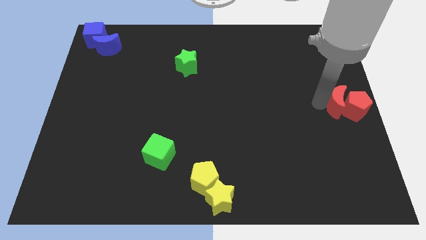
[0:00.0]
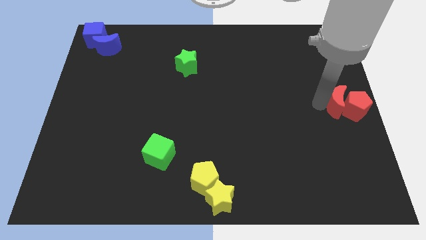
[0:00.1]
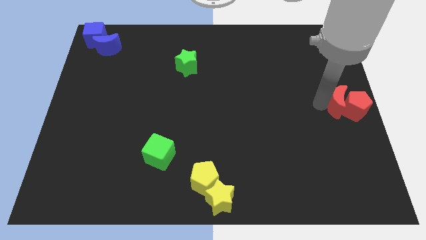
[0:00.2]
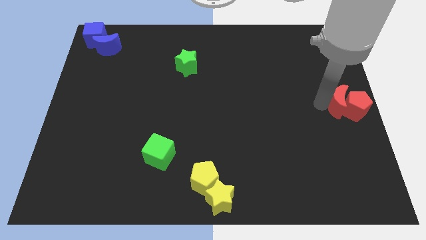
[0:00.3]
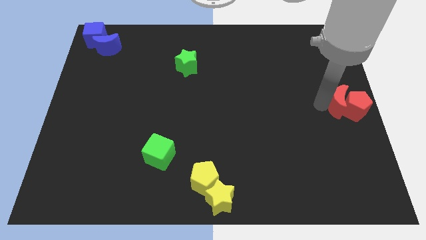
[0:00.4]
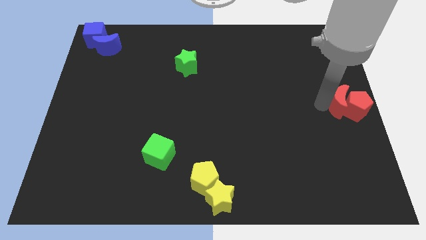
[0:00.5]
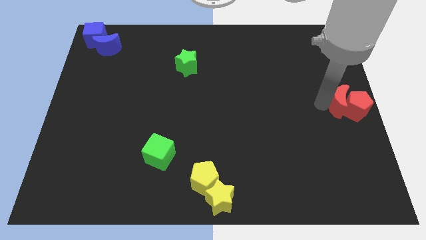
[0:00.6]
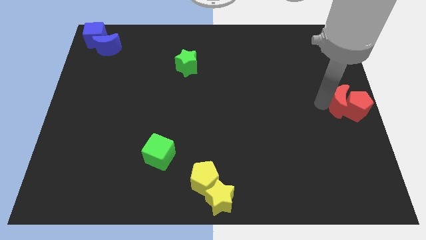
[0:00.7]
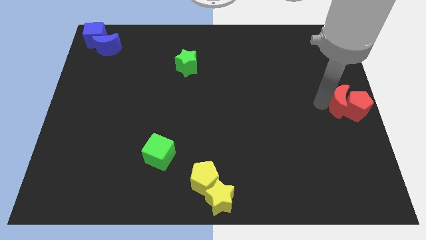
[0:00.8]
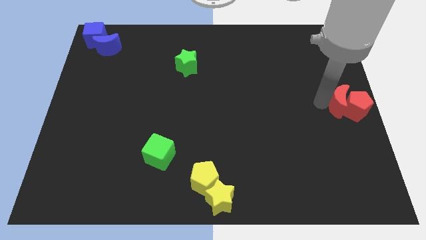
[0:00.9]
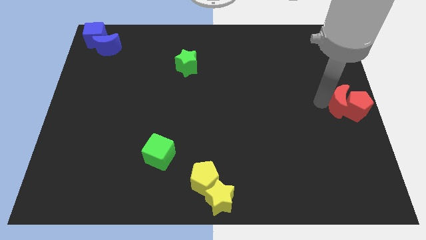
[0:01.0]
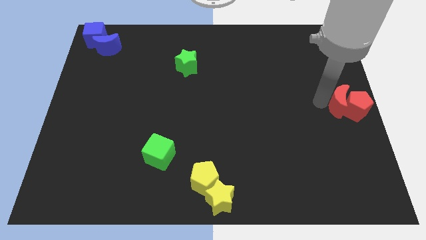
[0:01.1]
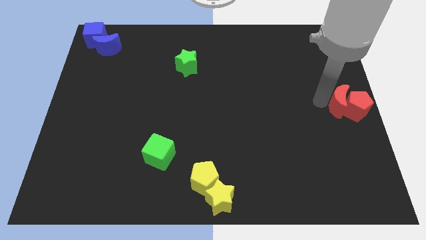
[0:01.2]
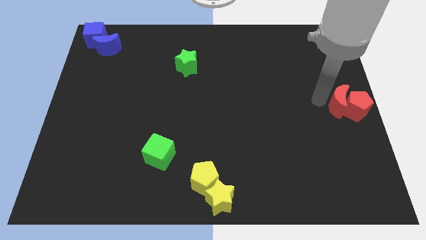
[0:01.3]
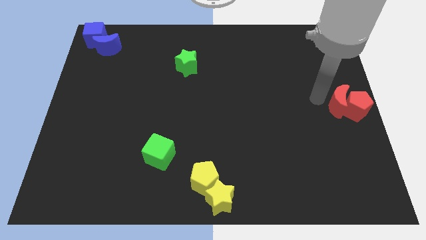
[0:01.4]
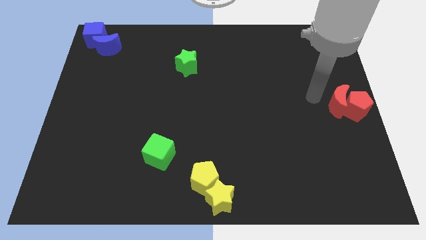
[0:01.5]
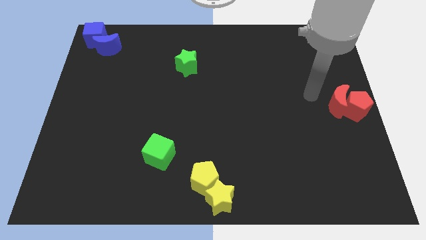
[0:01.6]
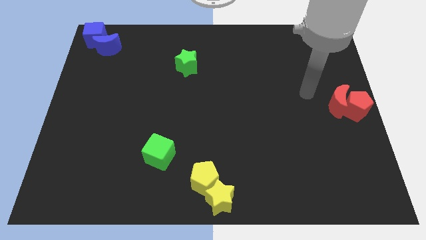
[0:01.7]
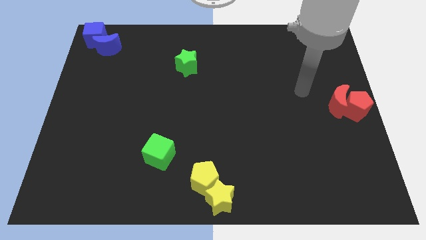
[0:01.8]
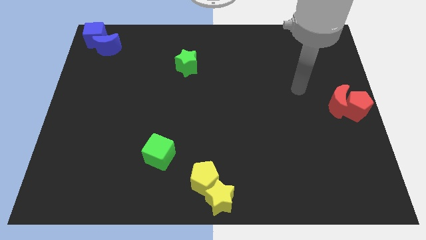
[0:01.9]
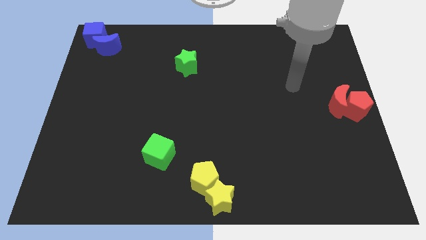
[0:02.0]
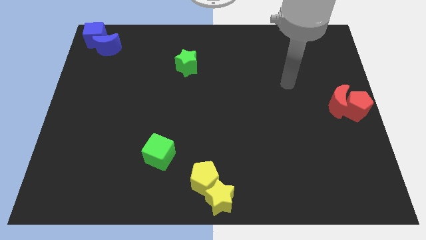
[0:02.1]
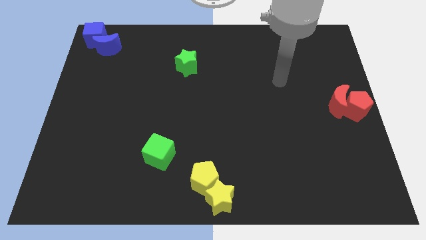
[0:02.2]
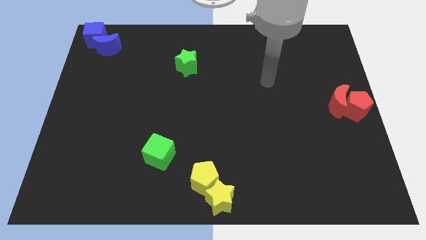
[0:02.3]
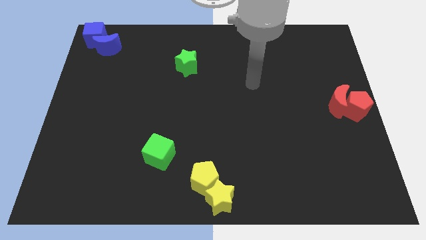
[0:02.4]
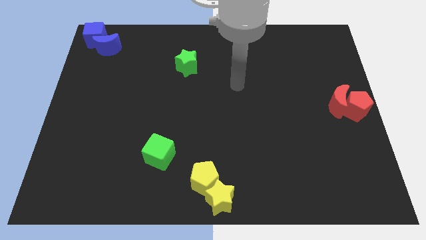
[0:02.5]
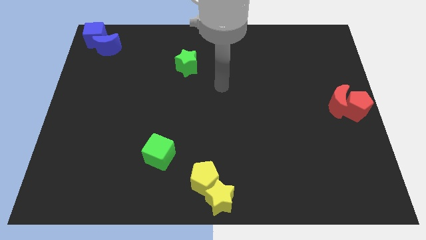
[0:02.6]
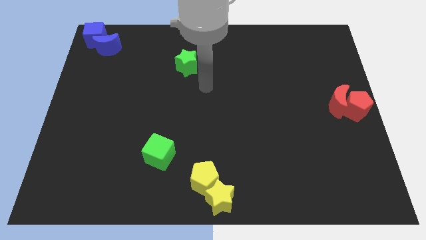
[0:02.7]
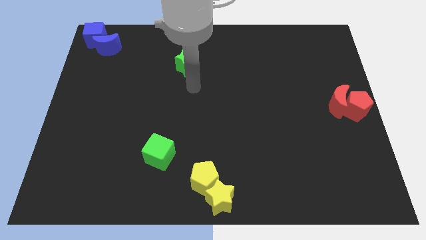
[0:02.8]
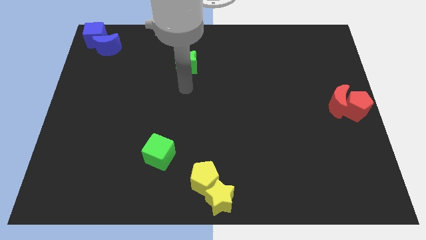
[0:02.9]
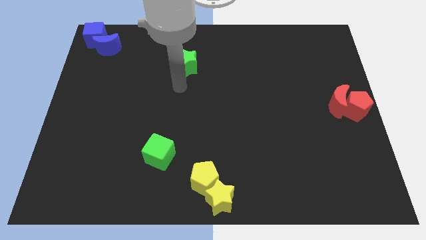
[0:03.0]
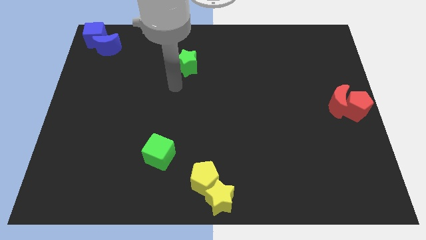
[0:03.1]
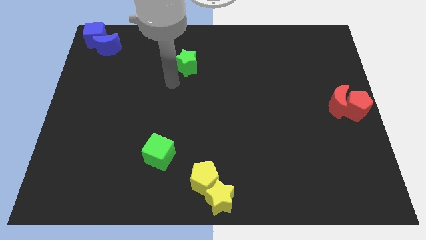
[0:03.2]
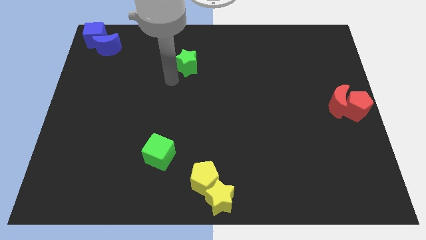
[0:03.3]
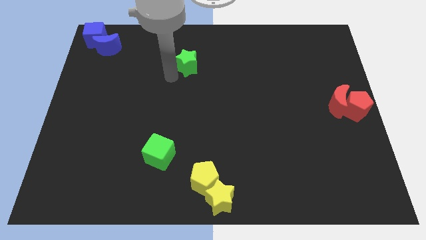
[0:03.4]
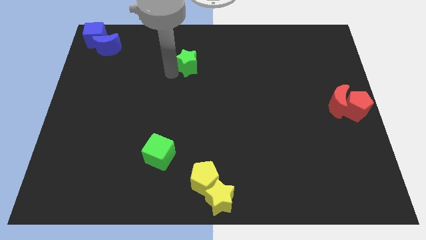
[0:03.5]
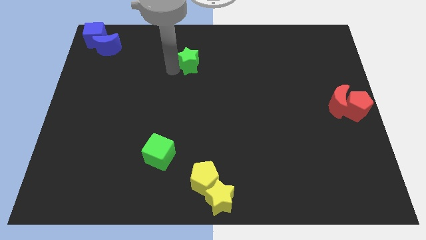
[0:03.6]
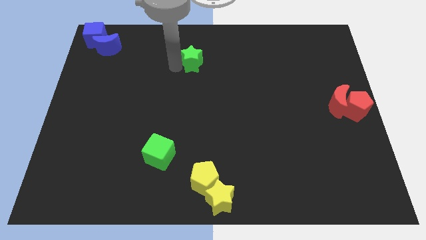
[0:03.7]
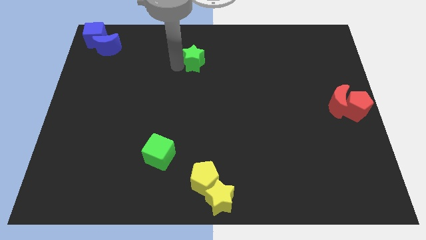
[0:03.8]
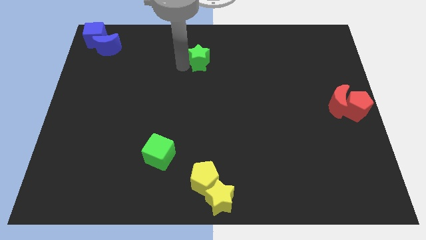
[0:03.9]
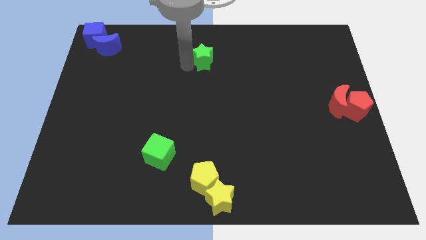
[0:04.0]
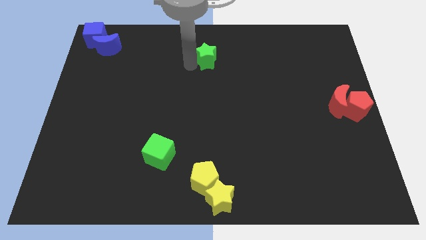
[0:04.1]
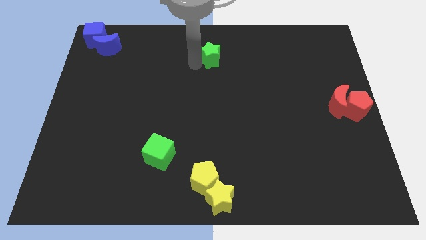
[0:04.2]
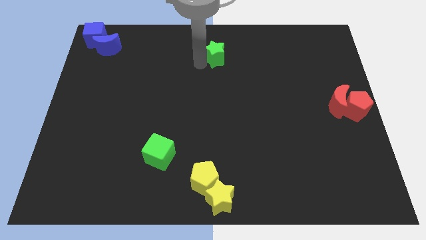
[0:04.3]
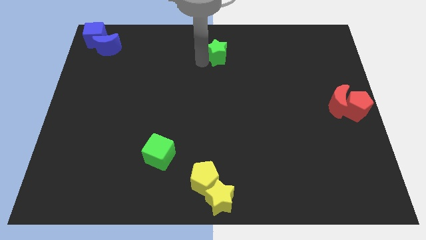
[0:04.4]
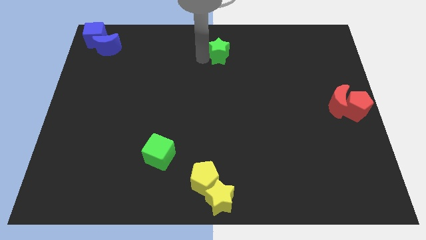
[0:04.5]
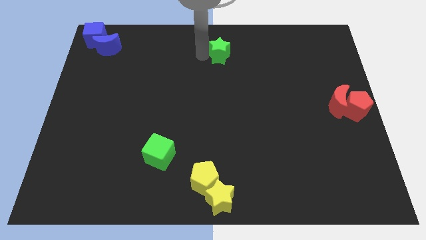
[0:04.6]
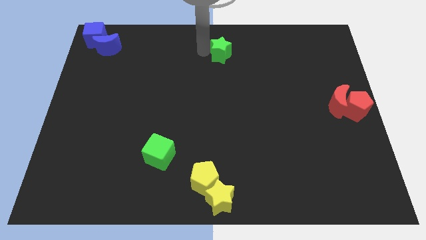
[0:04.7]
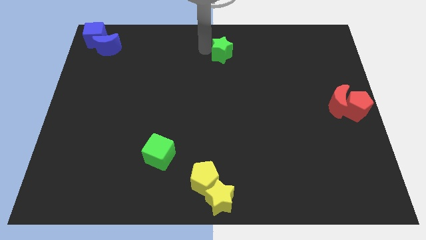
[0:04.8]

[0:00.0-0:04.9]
move the green star to the top center of the board

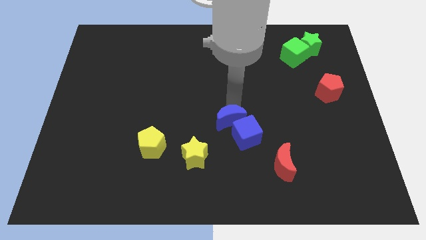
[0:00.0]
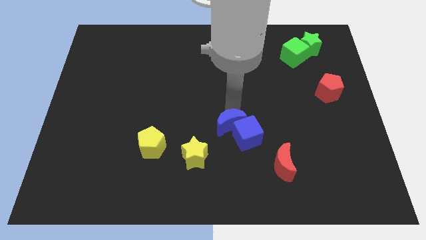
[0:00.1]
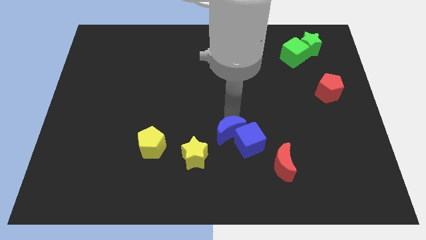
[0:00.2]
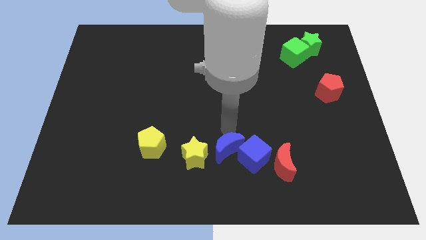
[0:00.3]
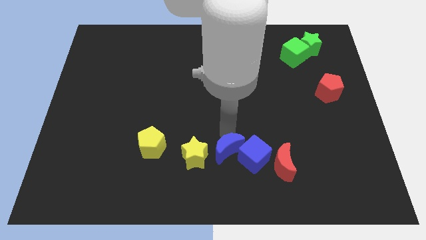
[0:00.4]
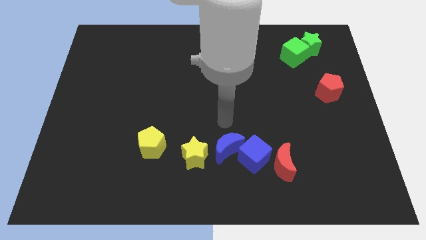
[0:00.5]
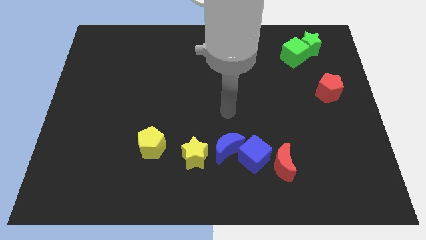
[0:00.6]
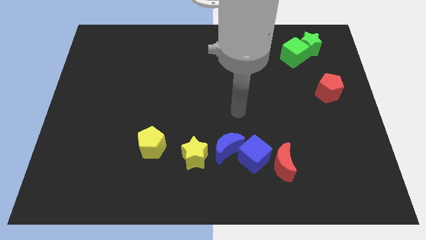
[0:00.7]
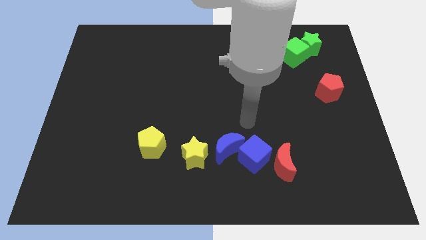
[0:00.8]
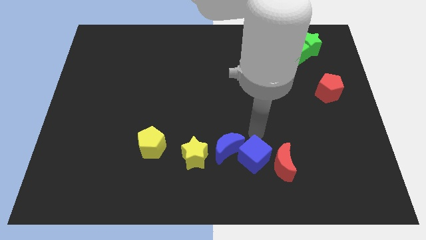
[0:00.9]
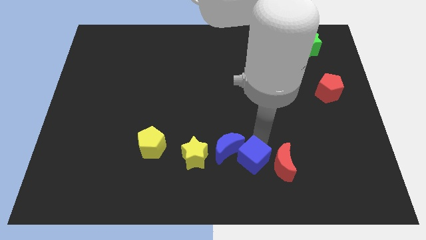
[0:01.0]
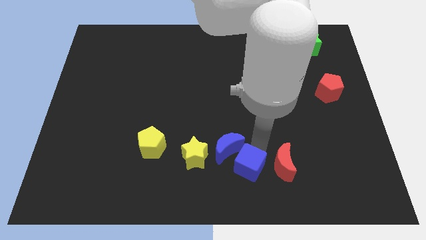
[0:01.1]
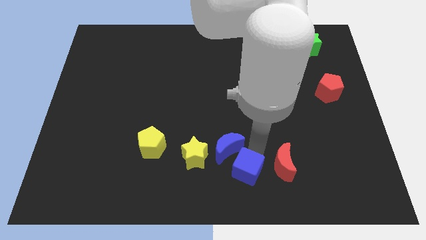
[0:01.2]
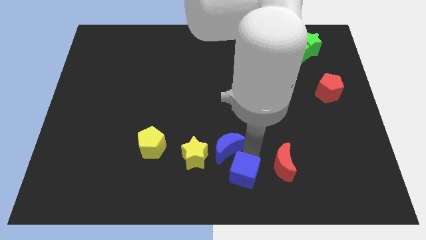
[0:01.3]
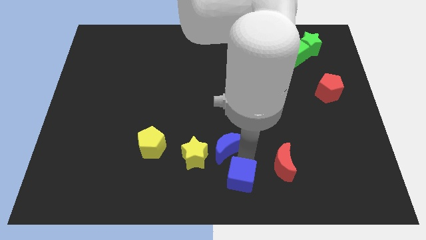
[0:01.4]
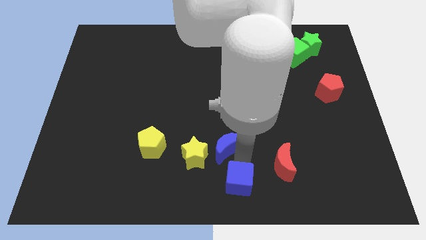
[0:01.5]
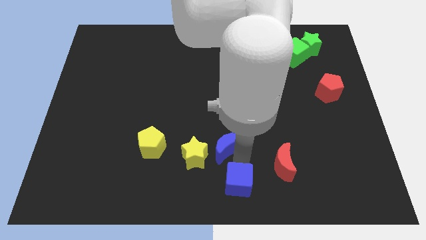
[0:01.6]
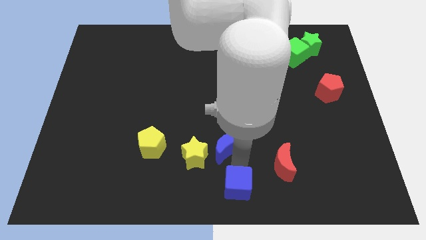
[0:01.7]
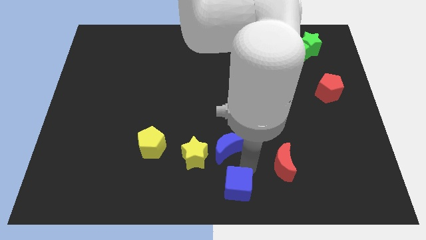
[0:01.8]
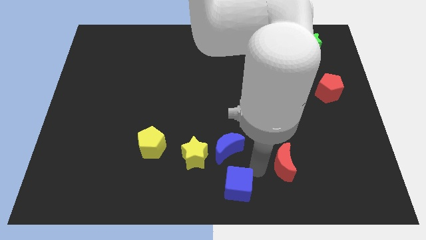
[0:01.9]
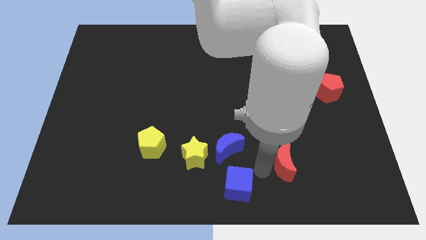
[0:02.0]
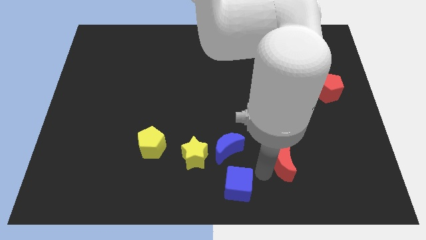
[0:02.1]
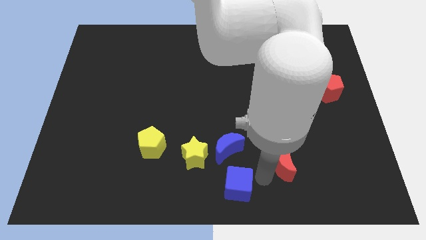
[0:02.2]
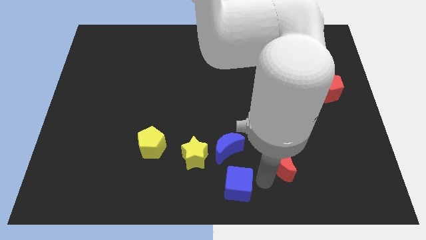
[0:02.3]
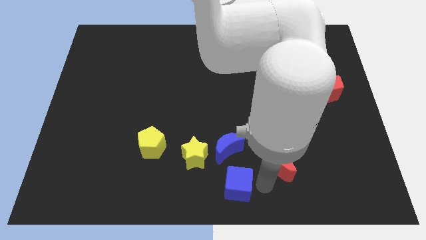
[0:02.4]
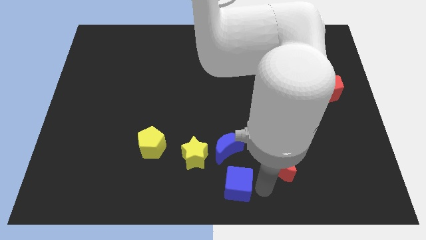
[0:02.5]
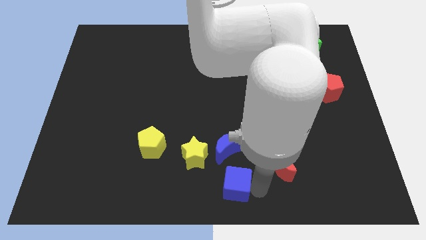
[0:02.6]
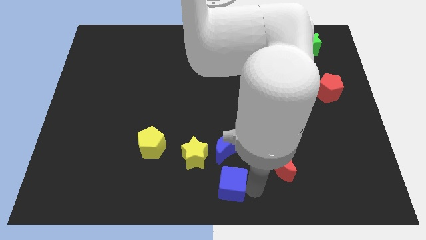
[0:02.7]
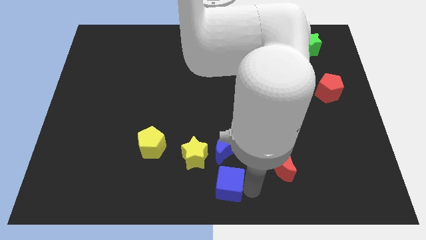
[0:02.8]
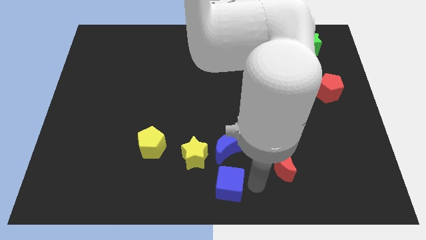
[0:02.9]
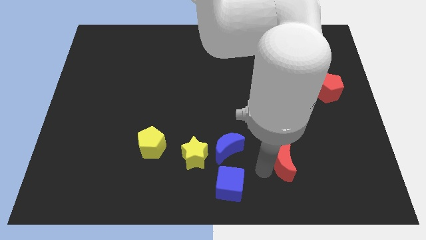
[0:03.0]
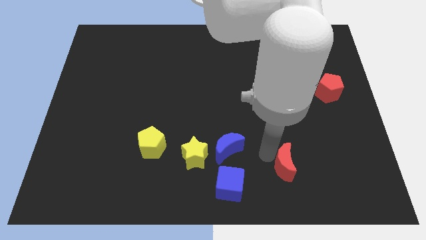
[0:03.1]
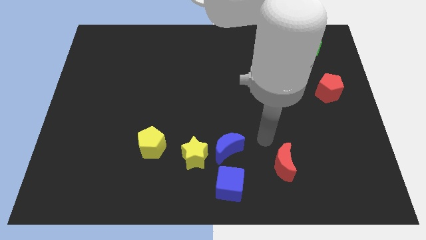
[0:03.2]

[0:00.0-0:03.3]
place the blue blocks in a vertical line at the bottom center of the board

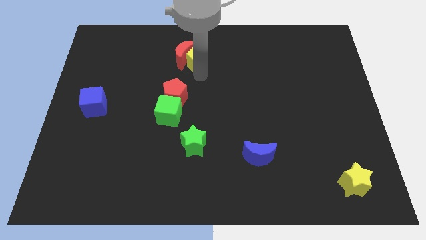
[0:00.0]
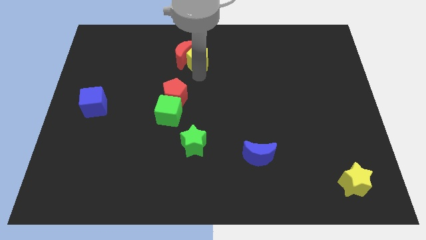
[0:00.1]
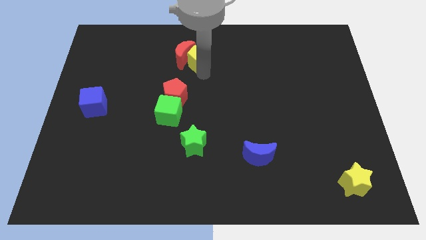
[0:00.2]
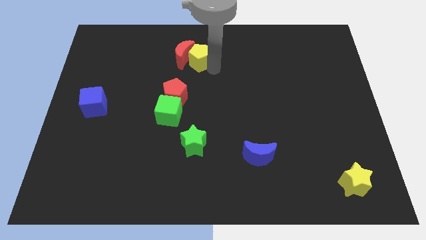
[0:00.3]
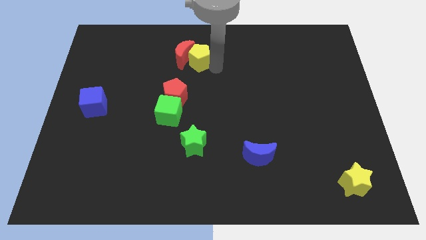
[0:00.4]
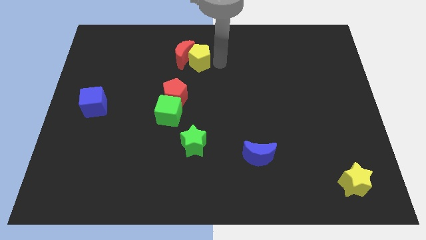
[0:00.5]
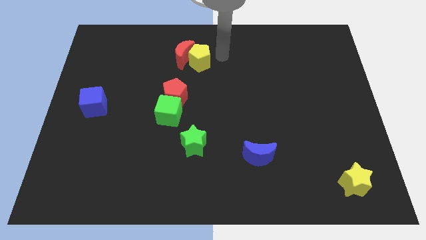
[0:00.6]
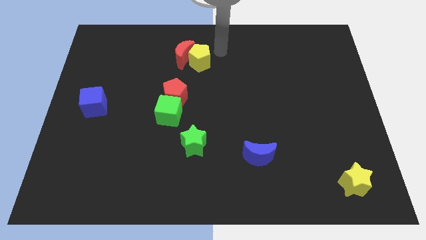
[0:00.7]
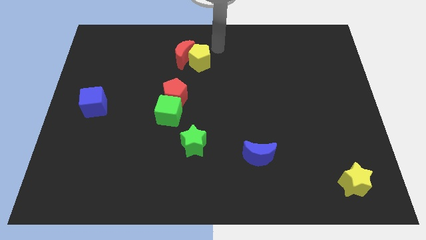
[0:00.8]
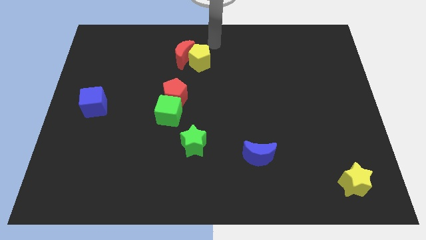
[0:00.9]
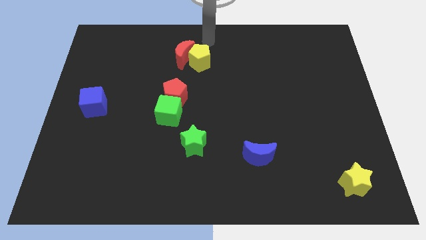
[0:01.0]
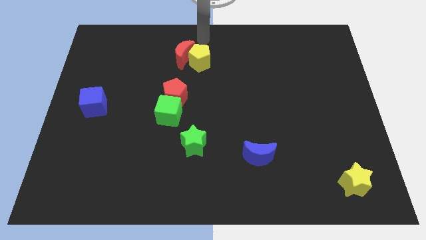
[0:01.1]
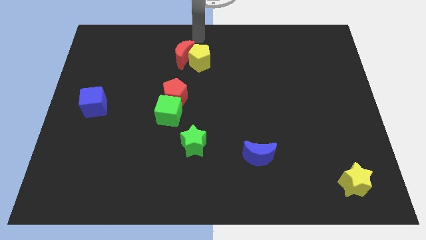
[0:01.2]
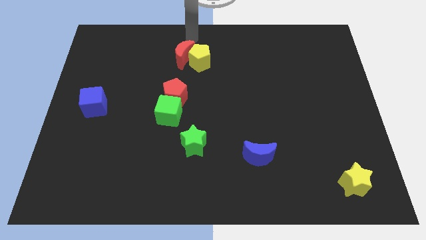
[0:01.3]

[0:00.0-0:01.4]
move yellow pentagon along with red crescent slighlty
